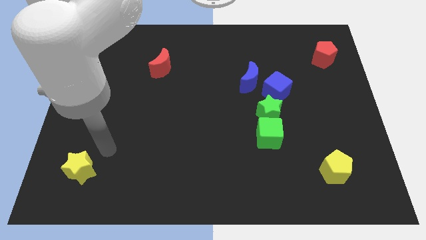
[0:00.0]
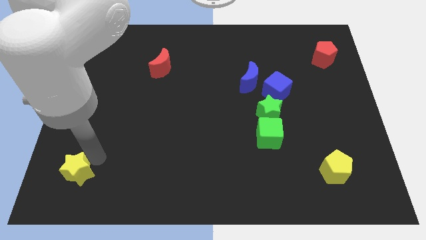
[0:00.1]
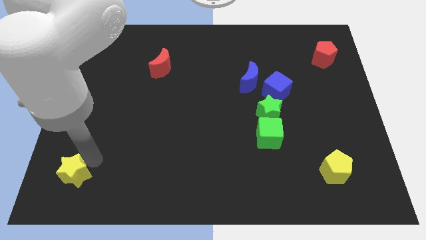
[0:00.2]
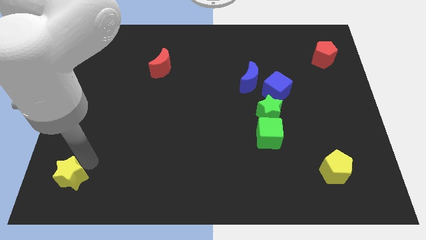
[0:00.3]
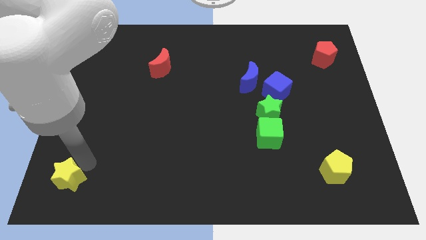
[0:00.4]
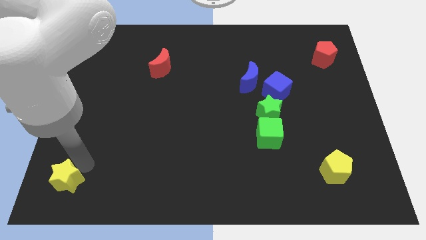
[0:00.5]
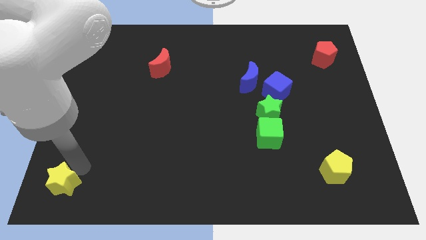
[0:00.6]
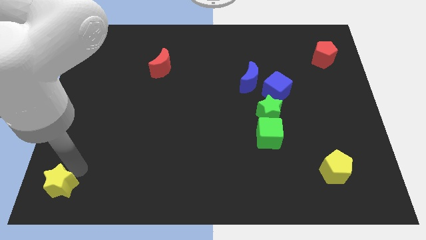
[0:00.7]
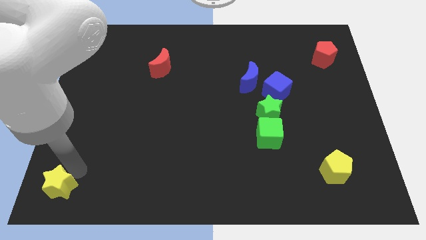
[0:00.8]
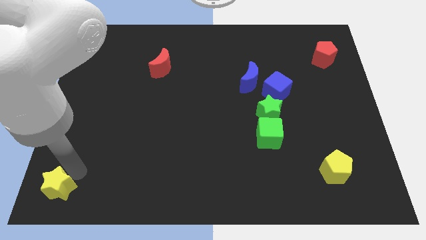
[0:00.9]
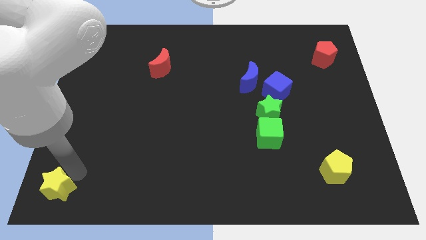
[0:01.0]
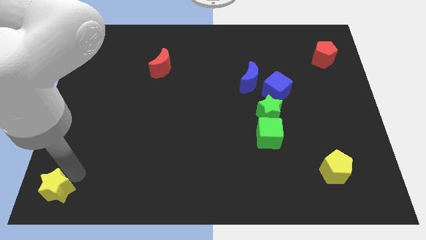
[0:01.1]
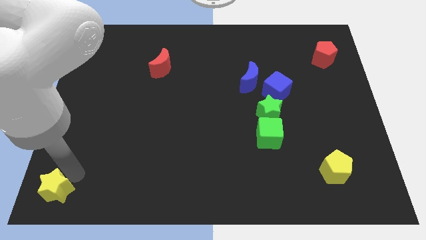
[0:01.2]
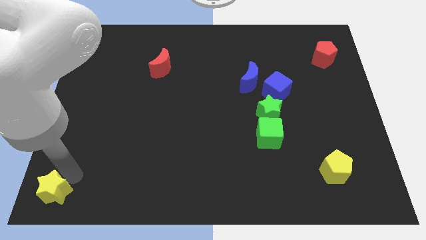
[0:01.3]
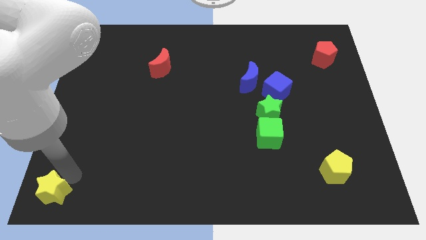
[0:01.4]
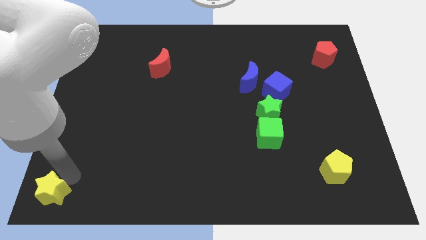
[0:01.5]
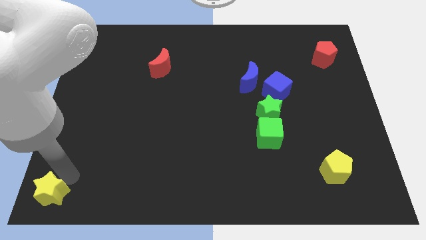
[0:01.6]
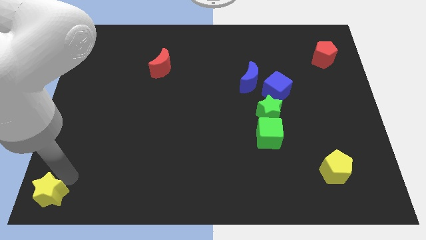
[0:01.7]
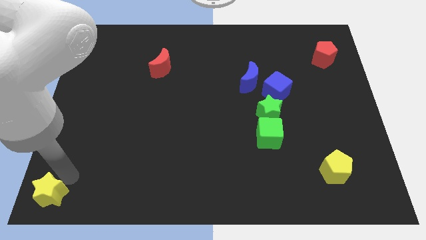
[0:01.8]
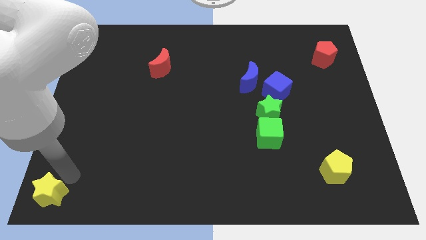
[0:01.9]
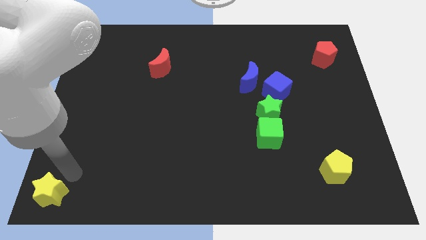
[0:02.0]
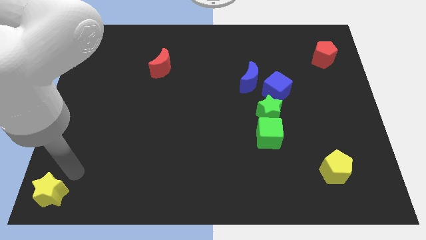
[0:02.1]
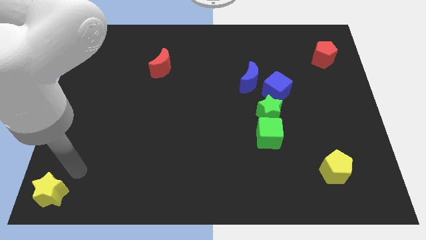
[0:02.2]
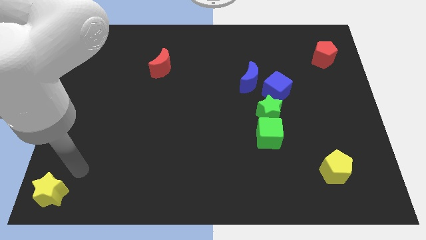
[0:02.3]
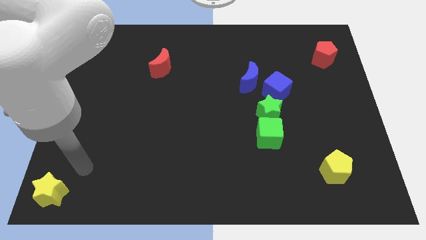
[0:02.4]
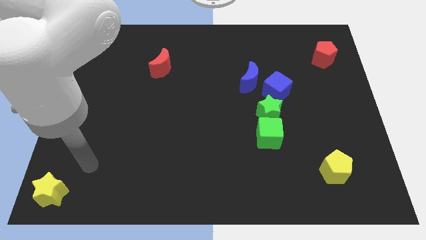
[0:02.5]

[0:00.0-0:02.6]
place the yellow star towards the down left corner

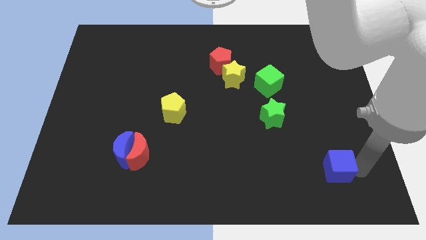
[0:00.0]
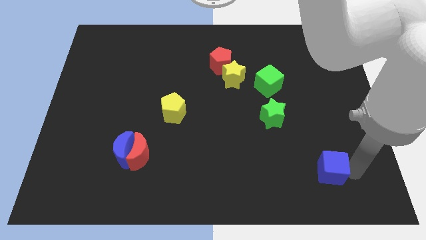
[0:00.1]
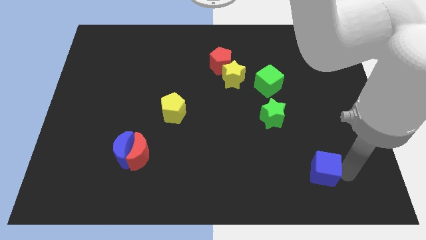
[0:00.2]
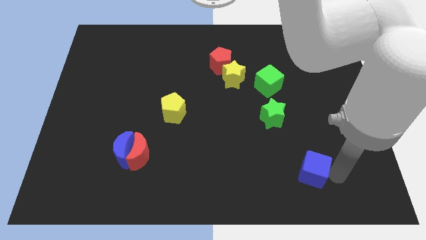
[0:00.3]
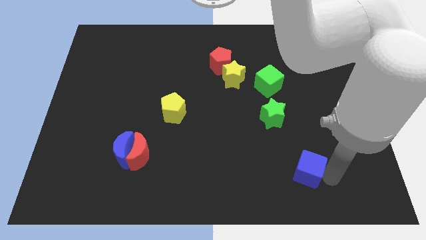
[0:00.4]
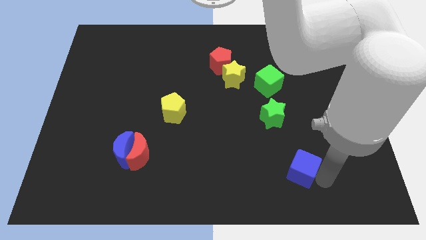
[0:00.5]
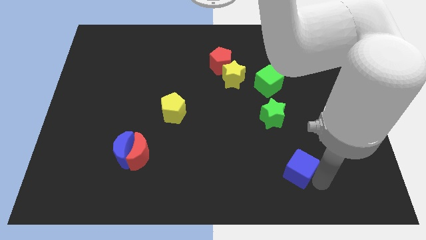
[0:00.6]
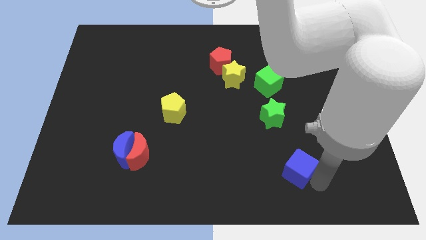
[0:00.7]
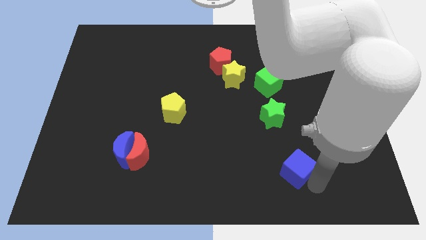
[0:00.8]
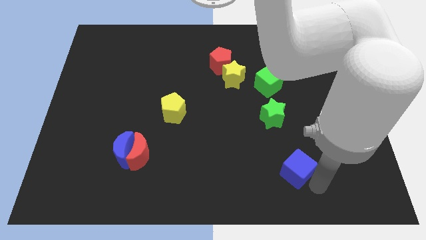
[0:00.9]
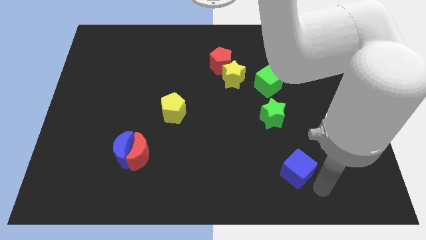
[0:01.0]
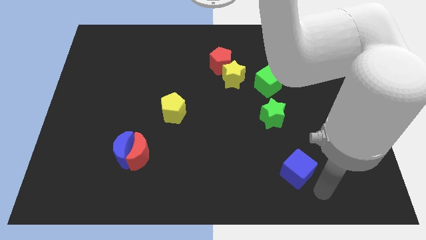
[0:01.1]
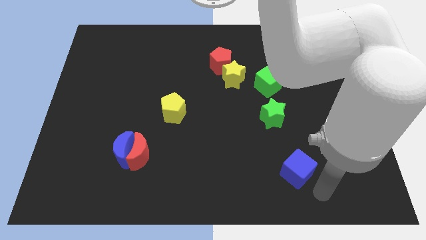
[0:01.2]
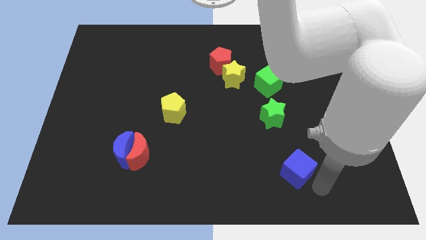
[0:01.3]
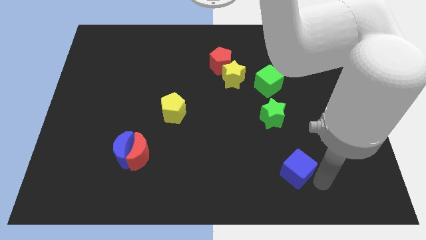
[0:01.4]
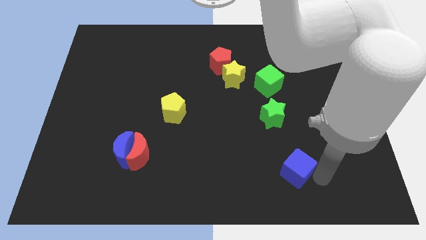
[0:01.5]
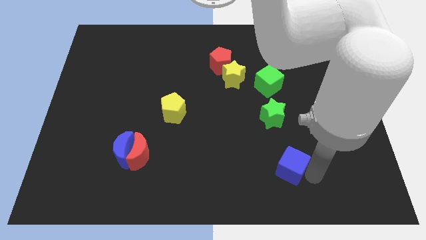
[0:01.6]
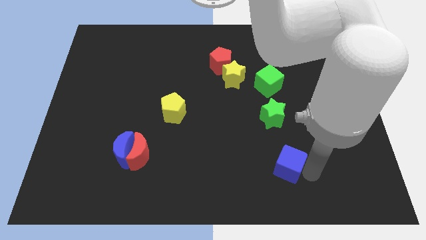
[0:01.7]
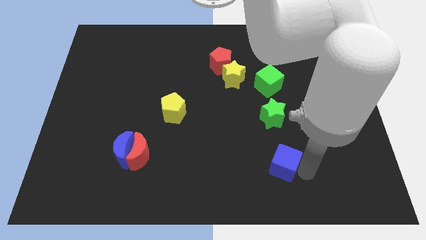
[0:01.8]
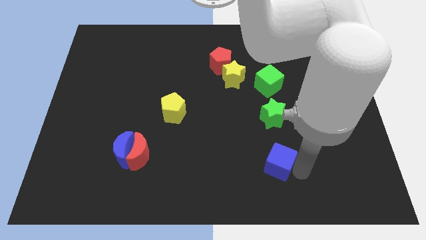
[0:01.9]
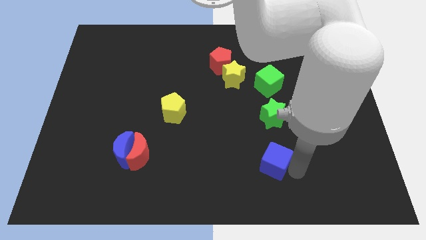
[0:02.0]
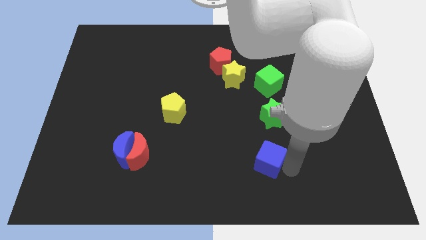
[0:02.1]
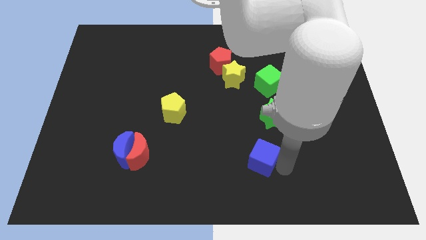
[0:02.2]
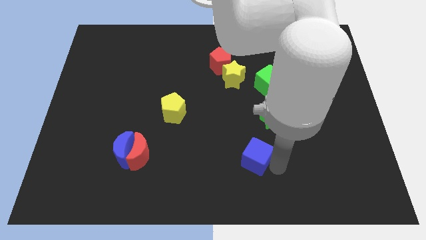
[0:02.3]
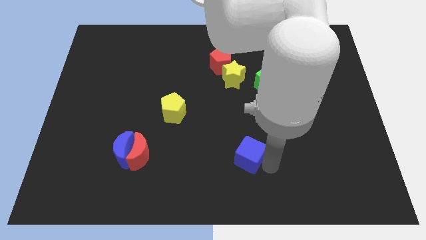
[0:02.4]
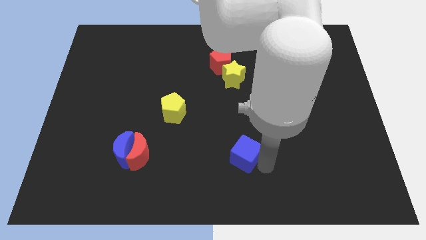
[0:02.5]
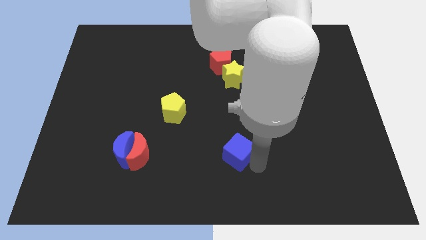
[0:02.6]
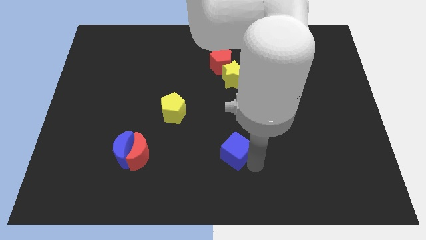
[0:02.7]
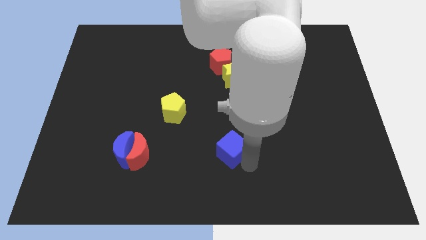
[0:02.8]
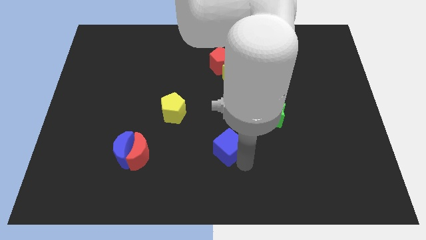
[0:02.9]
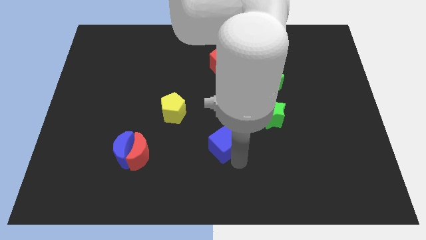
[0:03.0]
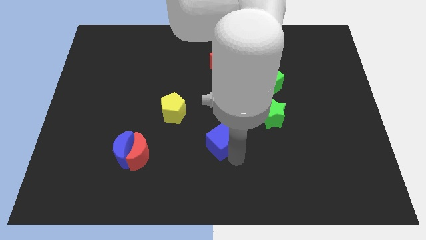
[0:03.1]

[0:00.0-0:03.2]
move the blue cube towards the center side

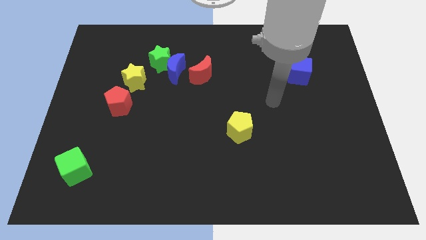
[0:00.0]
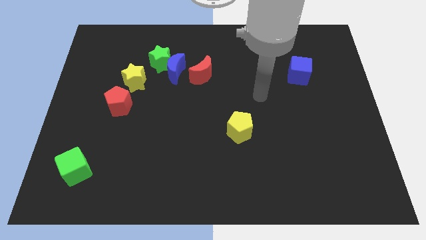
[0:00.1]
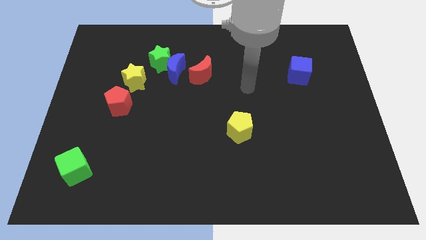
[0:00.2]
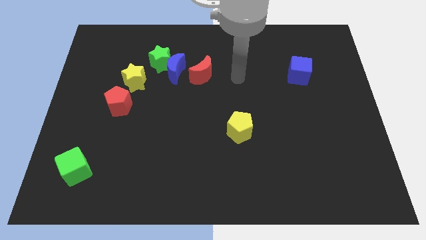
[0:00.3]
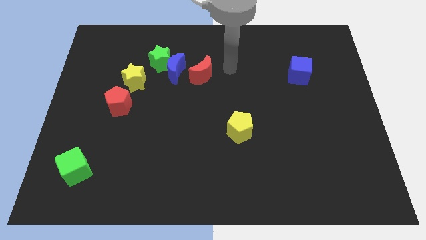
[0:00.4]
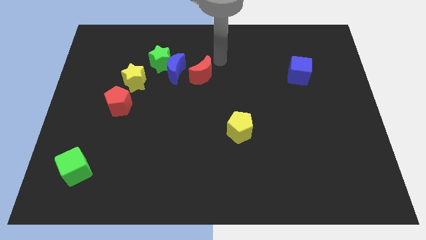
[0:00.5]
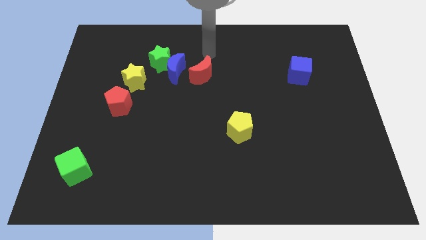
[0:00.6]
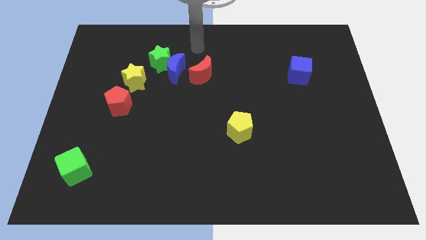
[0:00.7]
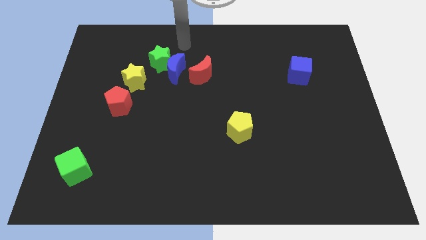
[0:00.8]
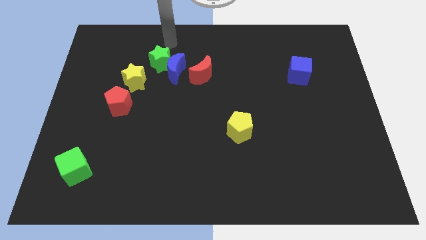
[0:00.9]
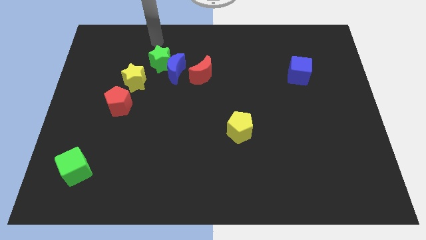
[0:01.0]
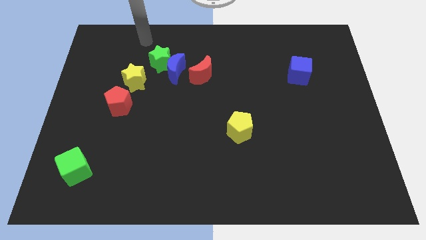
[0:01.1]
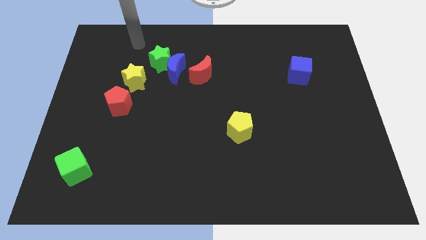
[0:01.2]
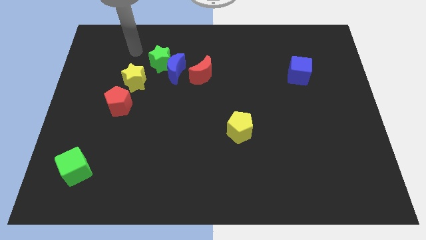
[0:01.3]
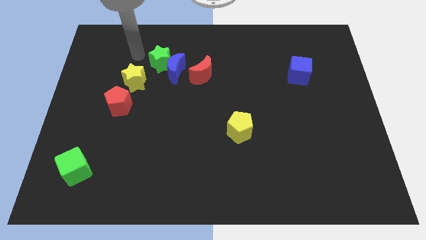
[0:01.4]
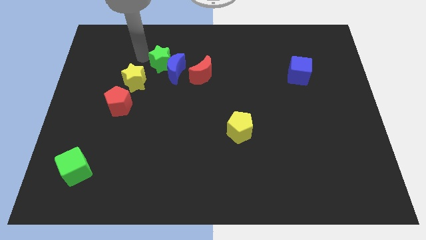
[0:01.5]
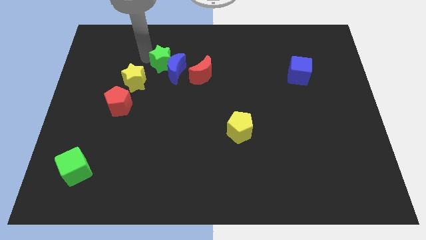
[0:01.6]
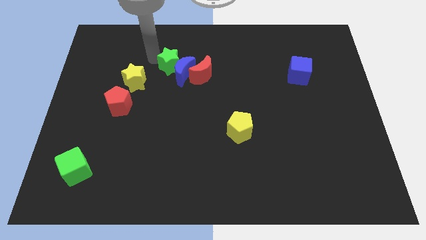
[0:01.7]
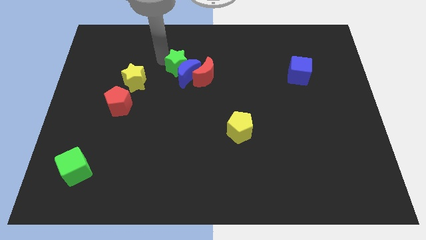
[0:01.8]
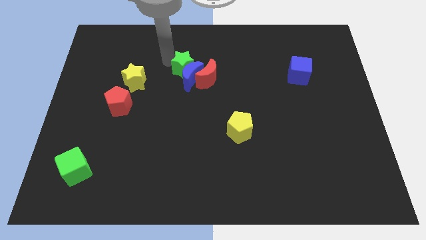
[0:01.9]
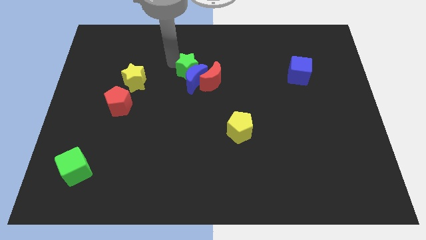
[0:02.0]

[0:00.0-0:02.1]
push the green star into the blue crescent

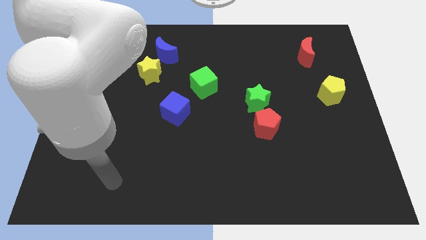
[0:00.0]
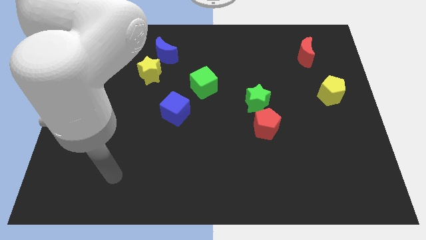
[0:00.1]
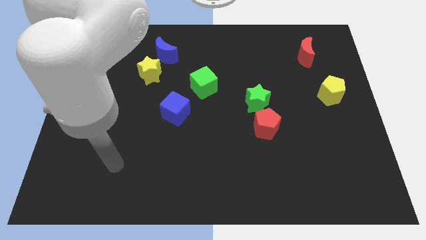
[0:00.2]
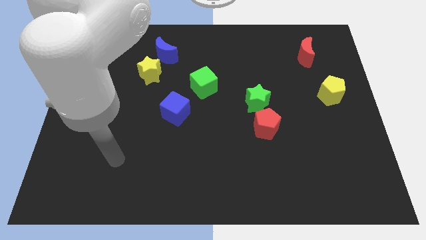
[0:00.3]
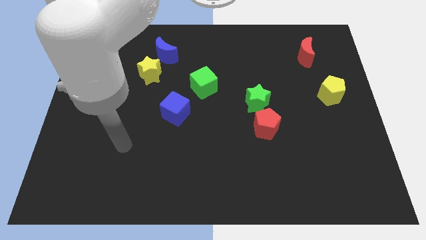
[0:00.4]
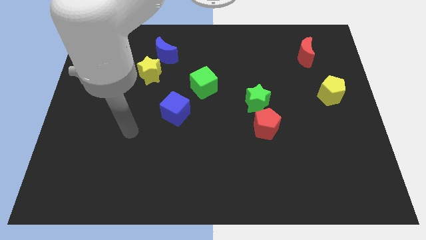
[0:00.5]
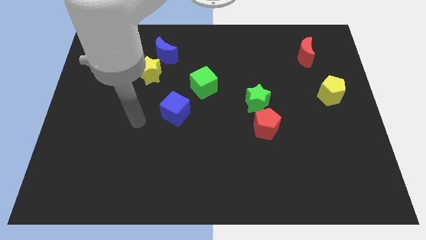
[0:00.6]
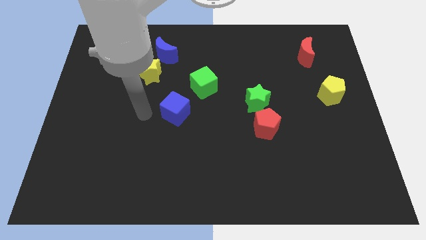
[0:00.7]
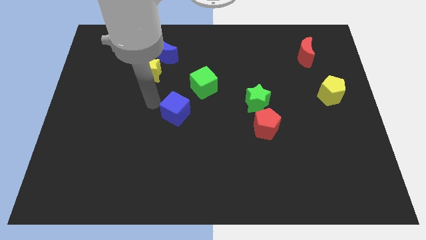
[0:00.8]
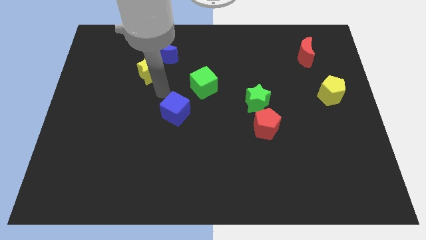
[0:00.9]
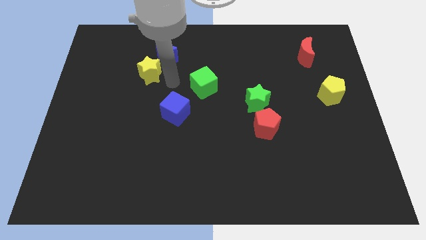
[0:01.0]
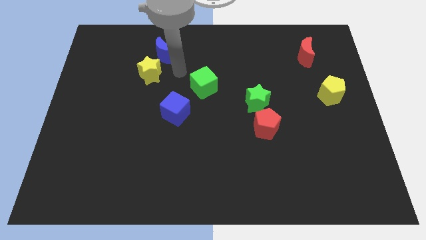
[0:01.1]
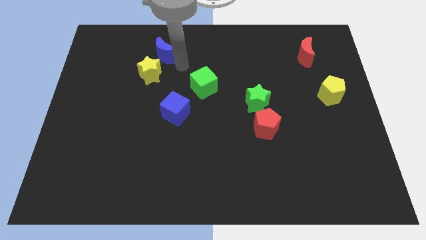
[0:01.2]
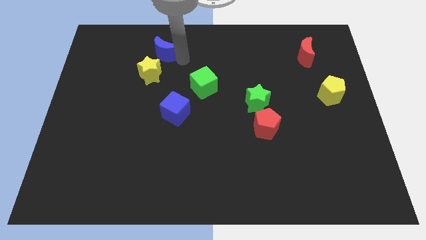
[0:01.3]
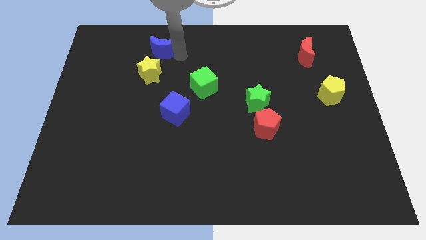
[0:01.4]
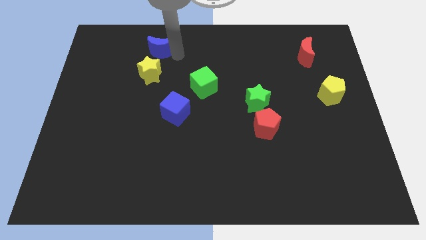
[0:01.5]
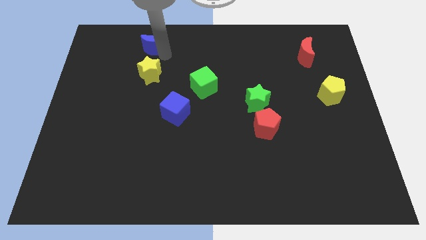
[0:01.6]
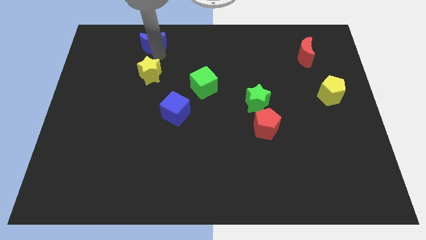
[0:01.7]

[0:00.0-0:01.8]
push the blue crescent towards top left
